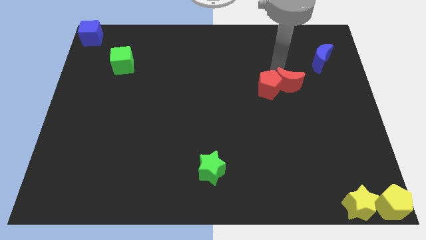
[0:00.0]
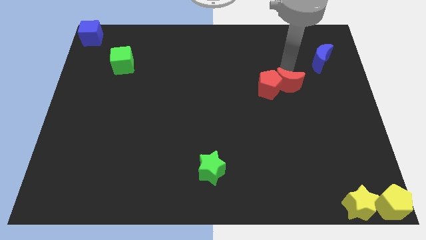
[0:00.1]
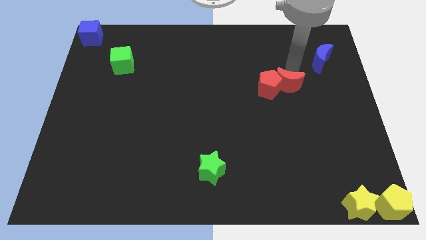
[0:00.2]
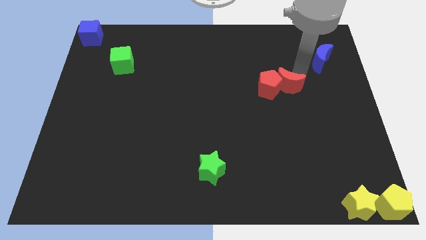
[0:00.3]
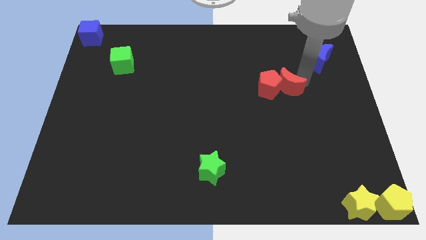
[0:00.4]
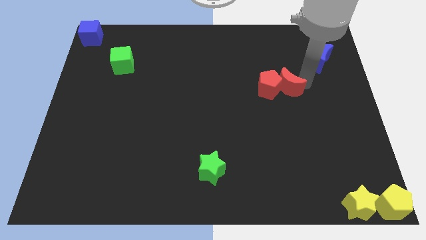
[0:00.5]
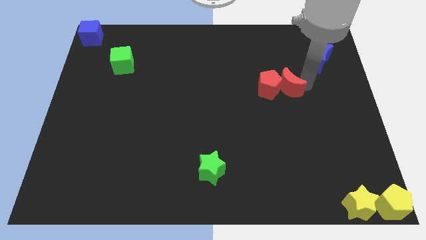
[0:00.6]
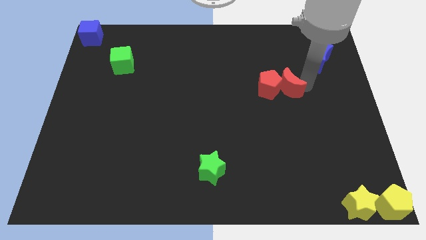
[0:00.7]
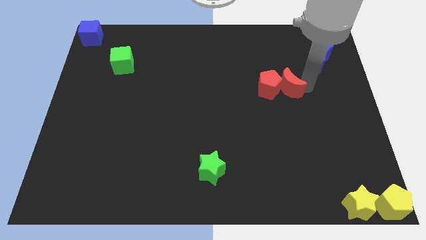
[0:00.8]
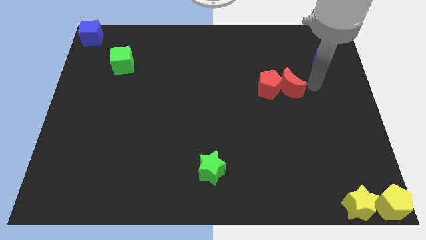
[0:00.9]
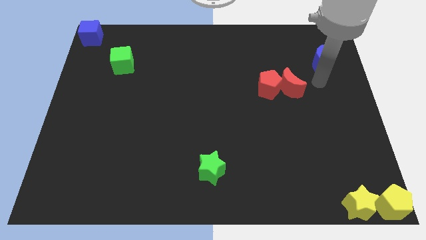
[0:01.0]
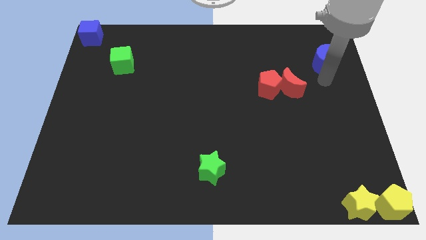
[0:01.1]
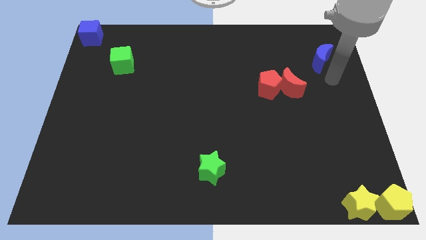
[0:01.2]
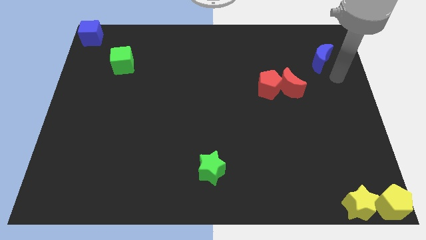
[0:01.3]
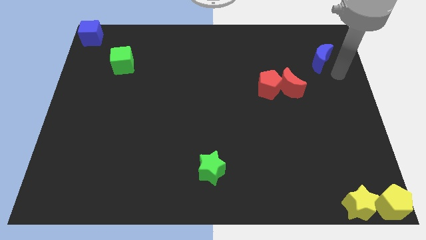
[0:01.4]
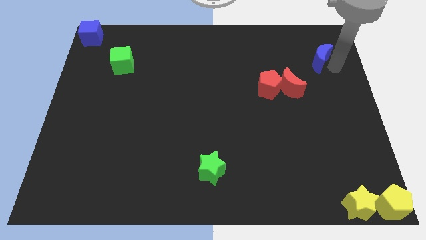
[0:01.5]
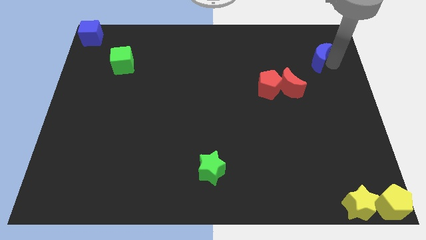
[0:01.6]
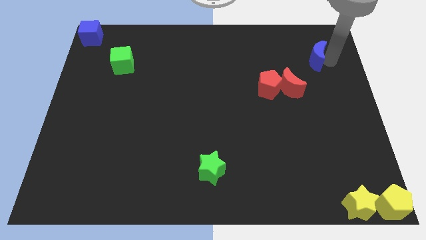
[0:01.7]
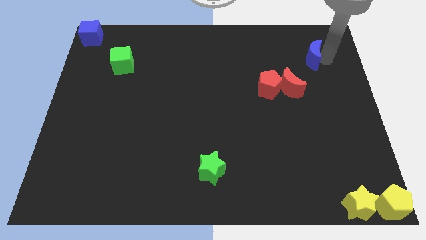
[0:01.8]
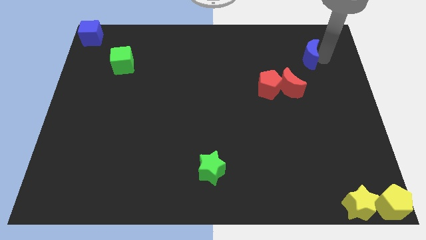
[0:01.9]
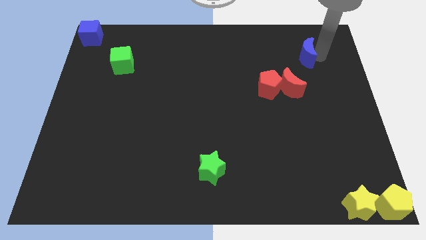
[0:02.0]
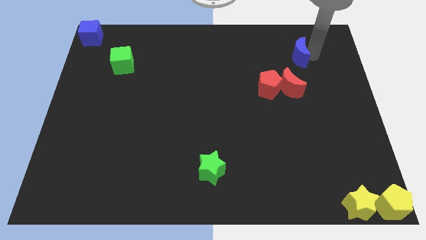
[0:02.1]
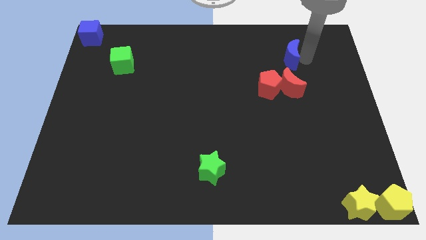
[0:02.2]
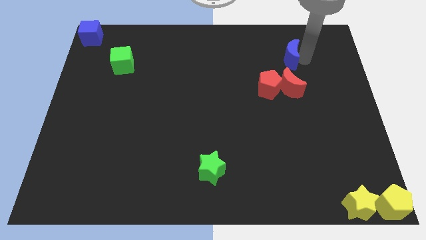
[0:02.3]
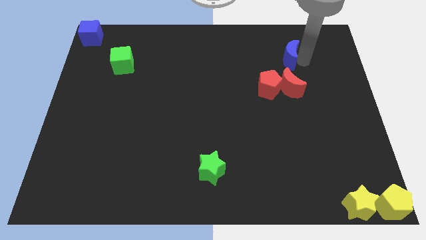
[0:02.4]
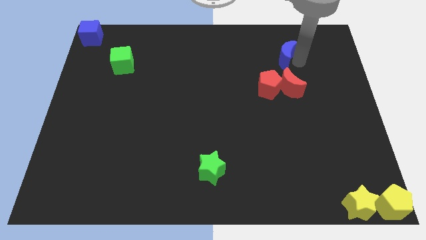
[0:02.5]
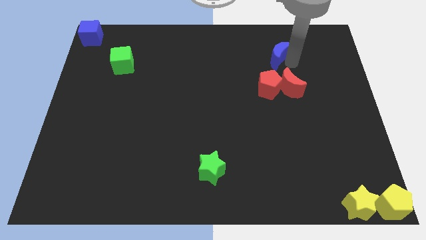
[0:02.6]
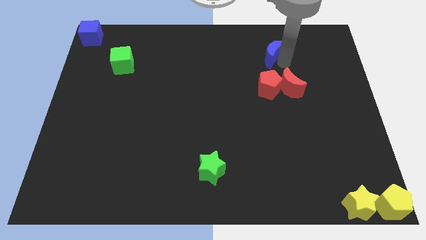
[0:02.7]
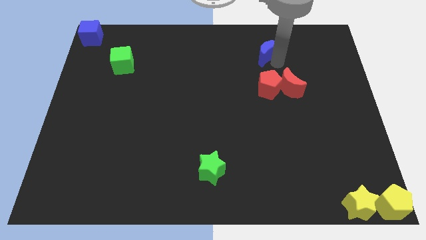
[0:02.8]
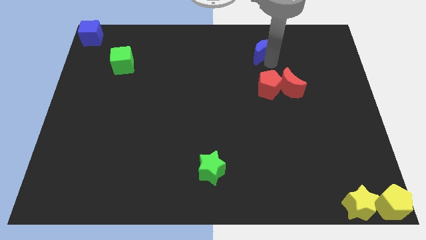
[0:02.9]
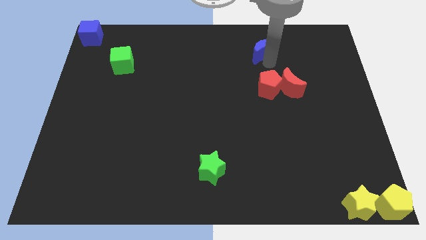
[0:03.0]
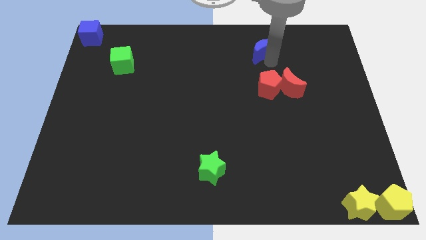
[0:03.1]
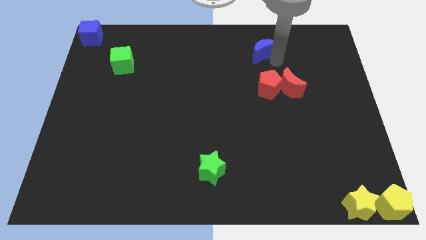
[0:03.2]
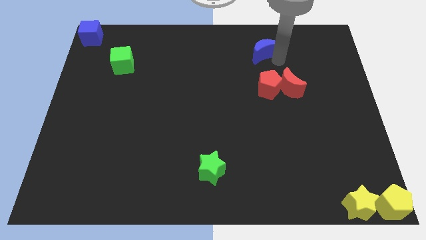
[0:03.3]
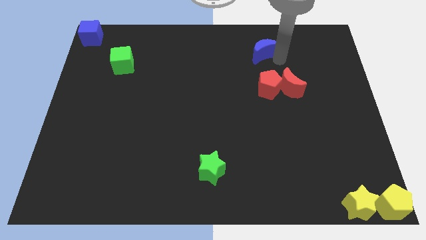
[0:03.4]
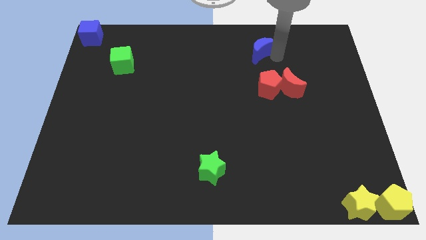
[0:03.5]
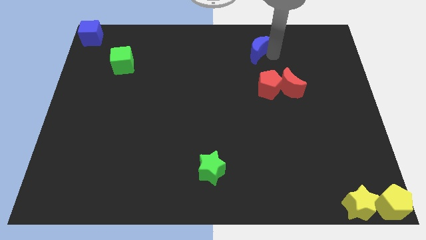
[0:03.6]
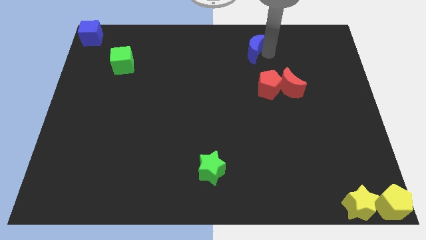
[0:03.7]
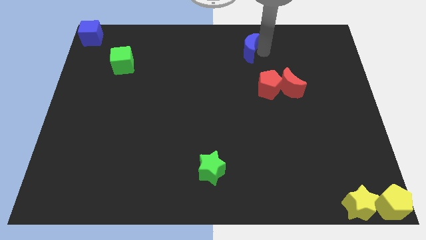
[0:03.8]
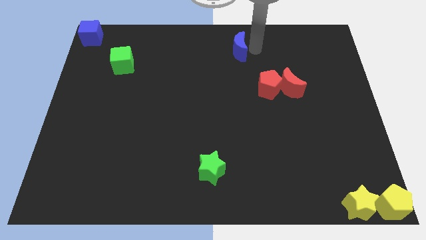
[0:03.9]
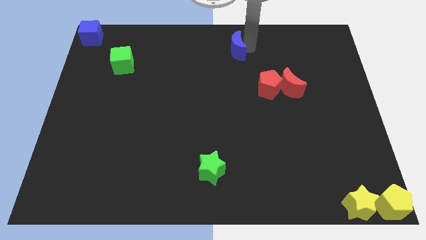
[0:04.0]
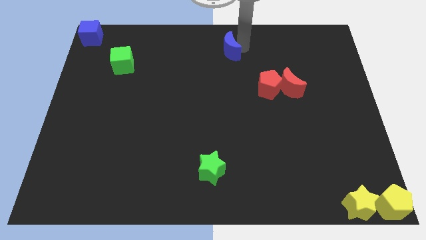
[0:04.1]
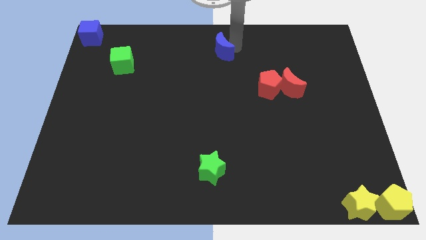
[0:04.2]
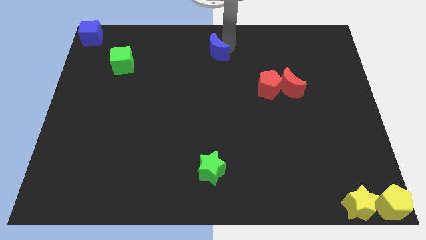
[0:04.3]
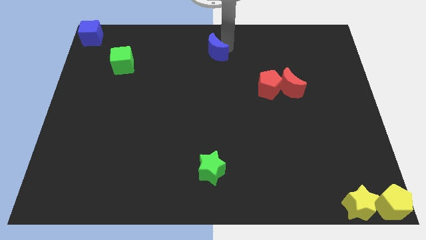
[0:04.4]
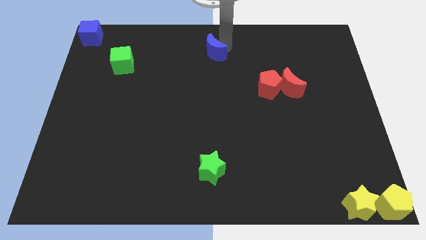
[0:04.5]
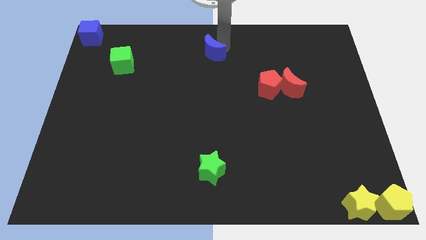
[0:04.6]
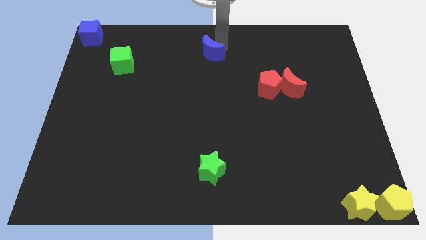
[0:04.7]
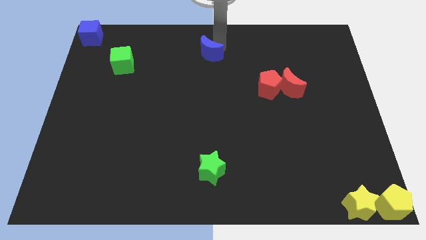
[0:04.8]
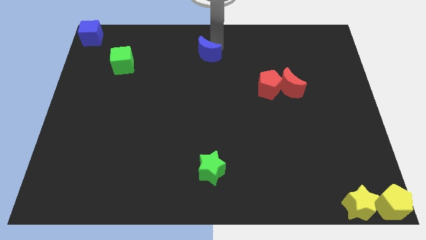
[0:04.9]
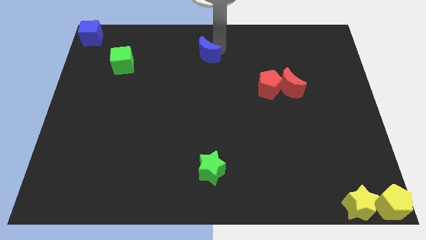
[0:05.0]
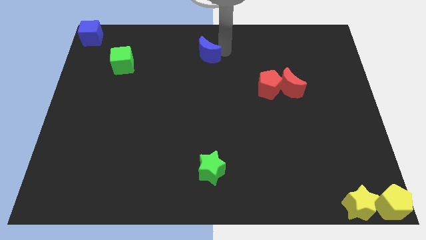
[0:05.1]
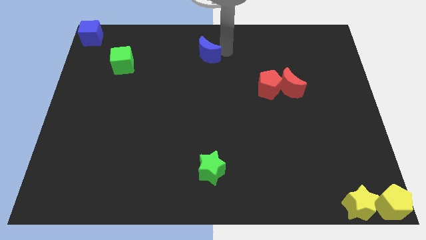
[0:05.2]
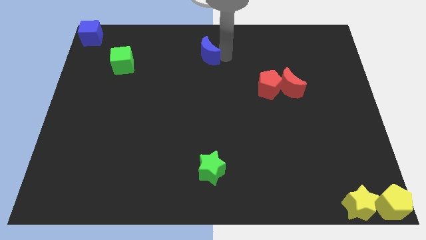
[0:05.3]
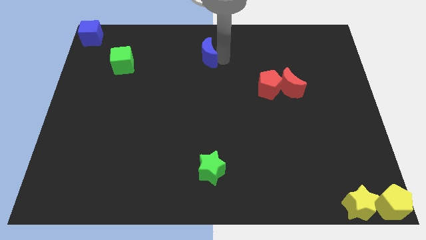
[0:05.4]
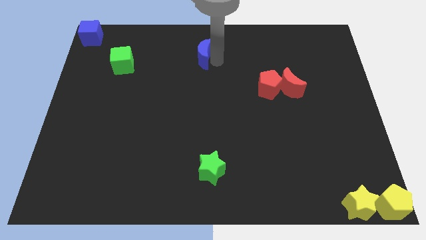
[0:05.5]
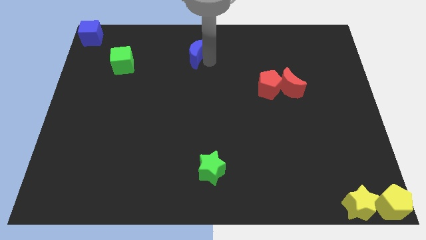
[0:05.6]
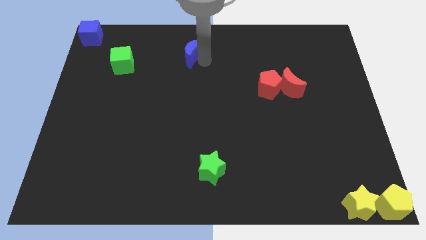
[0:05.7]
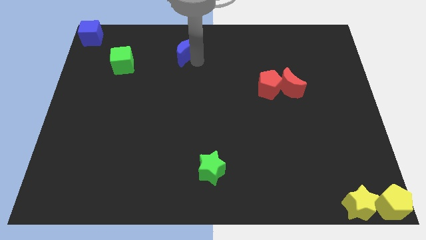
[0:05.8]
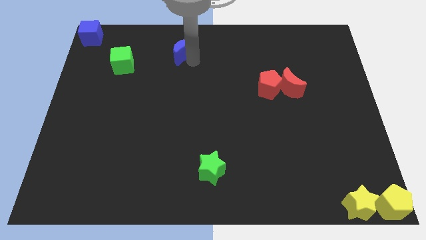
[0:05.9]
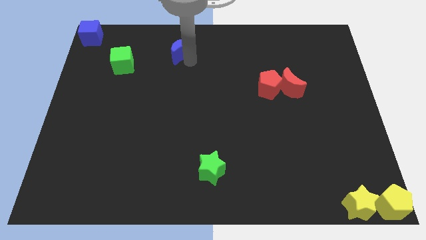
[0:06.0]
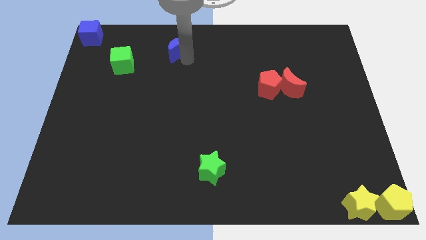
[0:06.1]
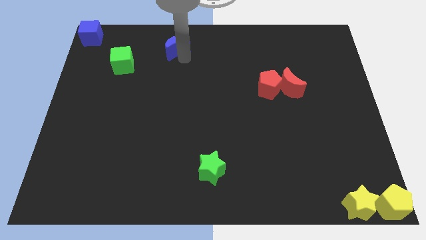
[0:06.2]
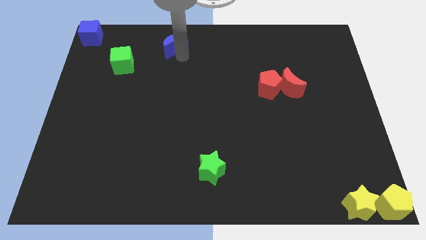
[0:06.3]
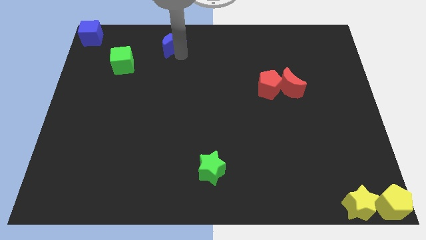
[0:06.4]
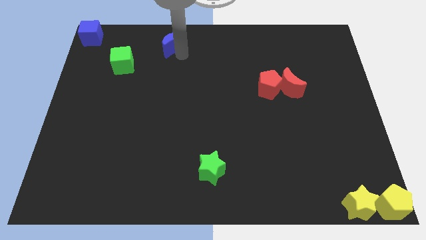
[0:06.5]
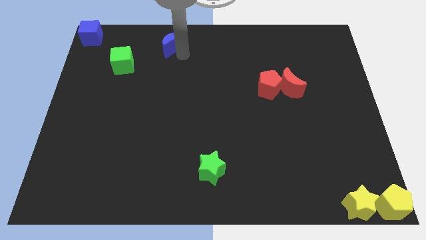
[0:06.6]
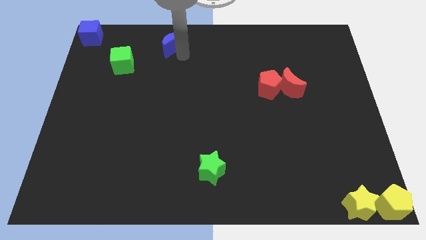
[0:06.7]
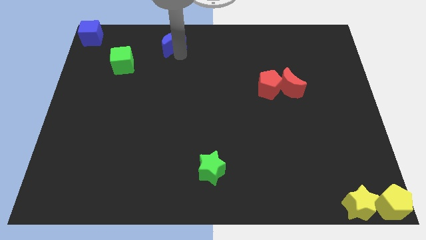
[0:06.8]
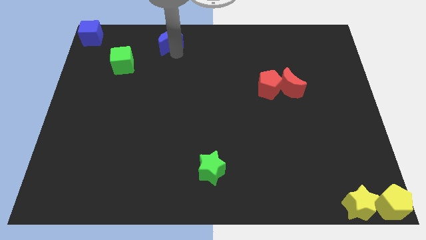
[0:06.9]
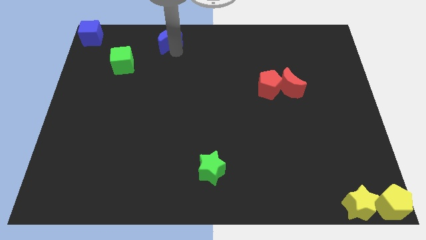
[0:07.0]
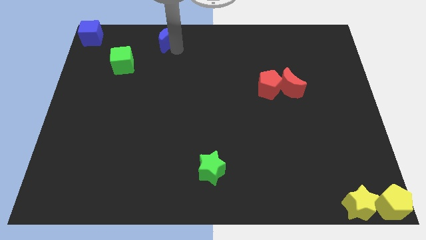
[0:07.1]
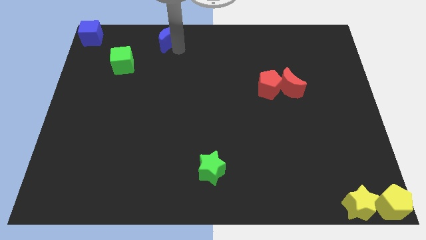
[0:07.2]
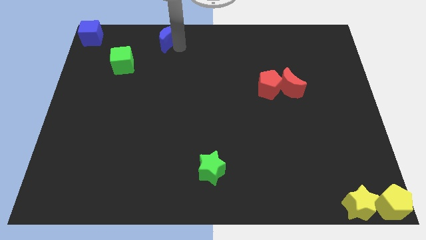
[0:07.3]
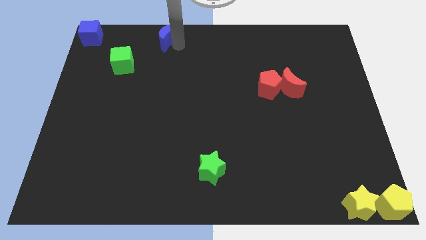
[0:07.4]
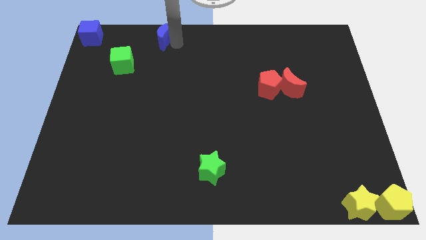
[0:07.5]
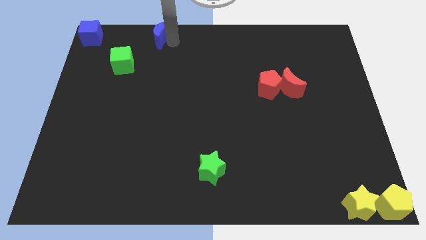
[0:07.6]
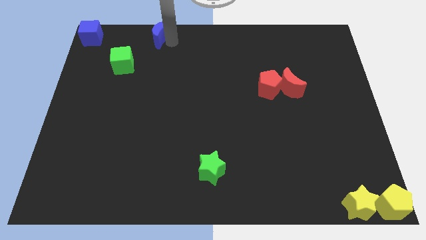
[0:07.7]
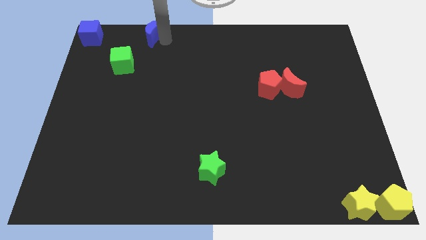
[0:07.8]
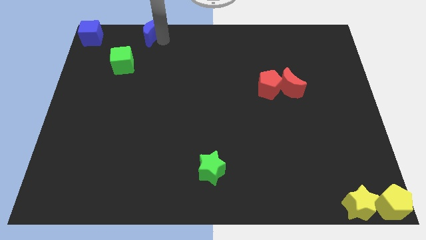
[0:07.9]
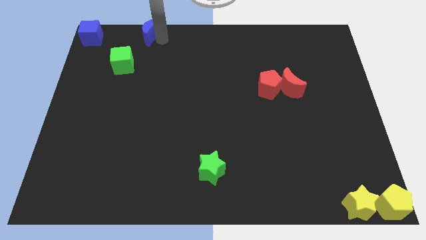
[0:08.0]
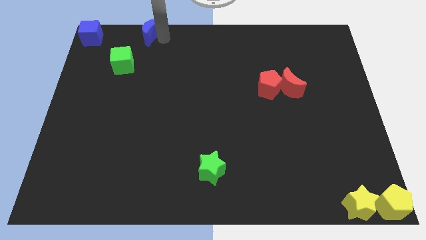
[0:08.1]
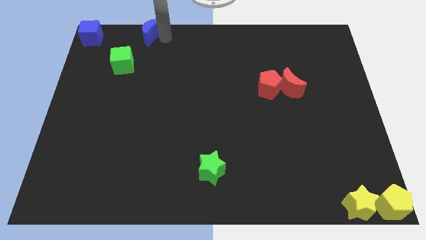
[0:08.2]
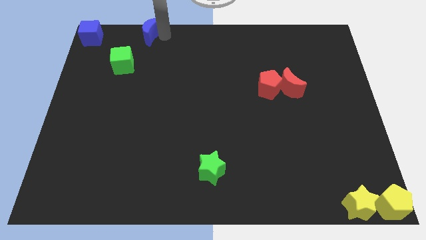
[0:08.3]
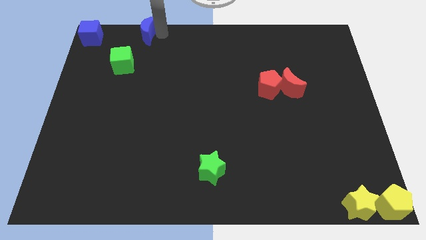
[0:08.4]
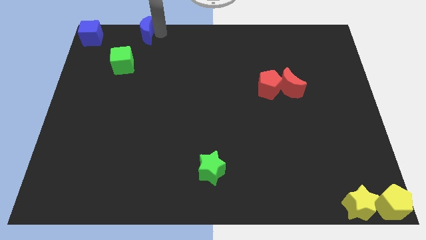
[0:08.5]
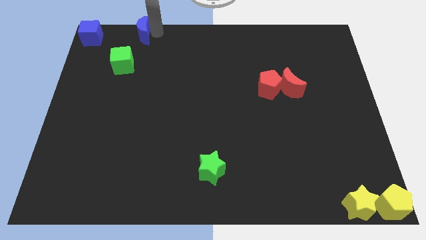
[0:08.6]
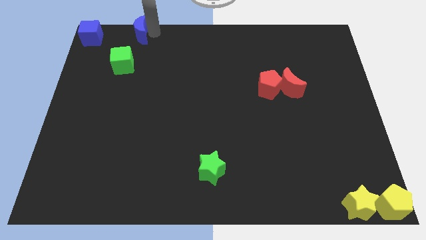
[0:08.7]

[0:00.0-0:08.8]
push the blue semicircle towards the blue cube

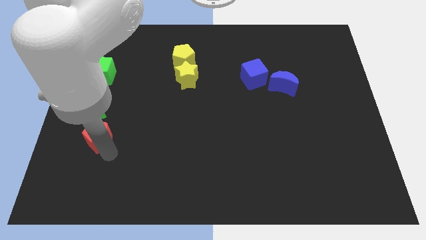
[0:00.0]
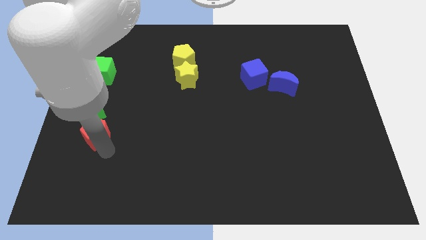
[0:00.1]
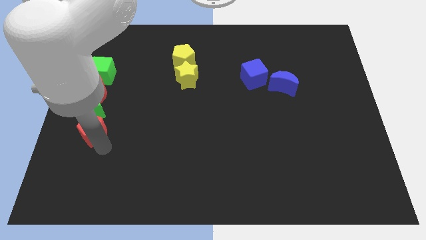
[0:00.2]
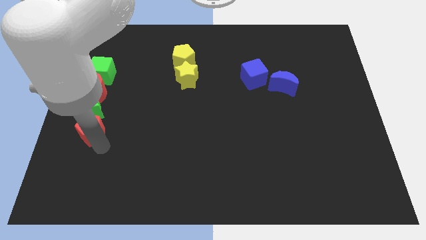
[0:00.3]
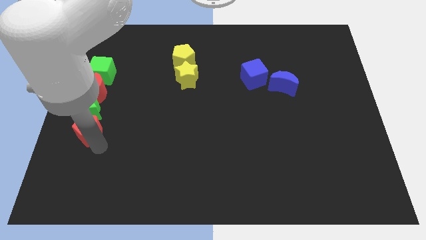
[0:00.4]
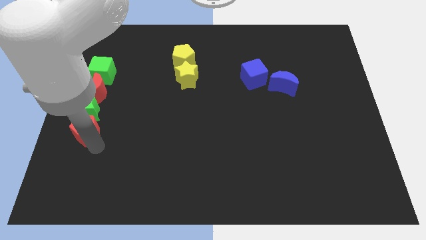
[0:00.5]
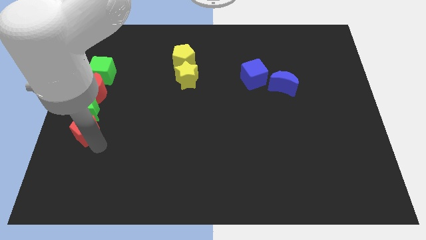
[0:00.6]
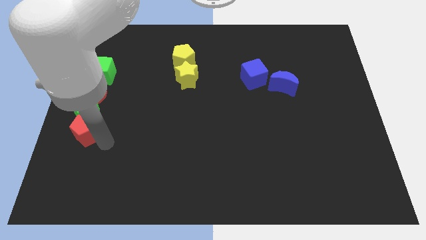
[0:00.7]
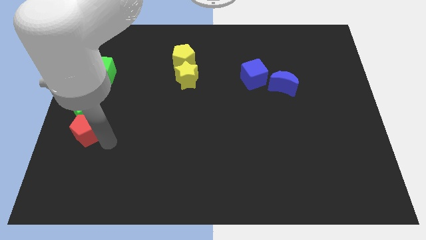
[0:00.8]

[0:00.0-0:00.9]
push red pentagon in to green star
